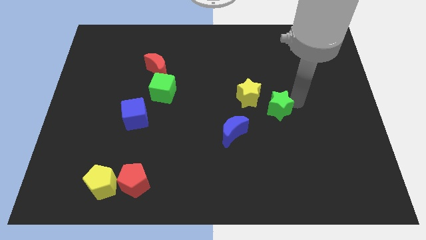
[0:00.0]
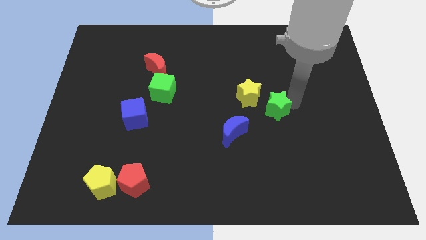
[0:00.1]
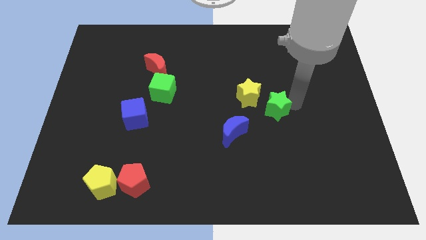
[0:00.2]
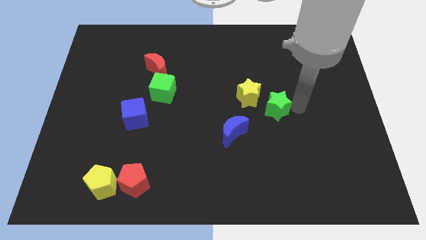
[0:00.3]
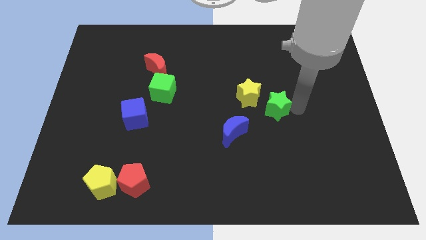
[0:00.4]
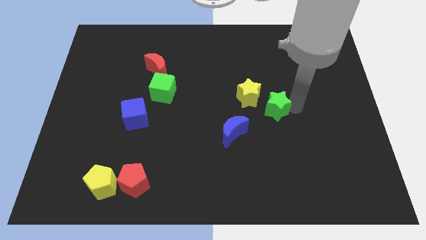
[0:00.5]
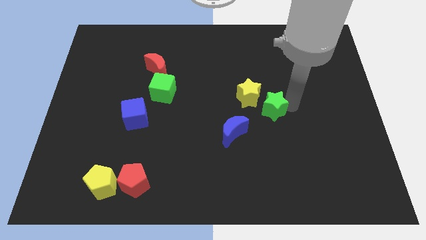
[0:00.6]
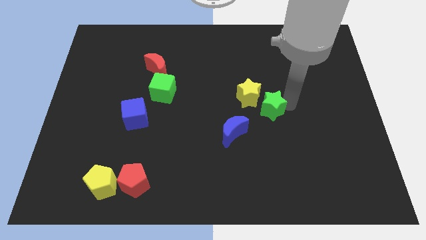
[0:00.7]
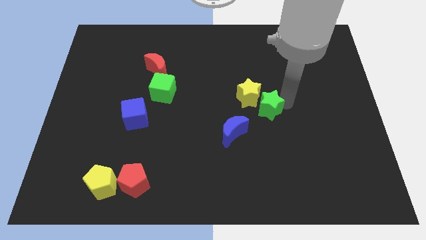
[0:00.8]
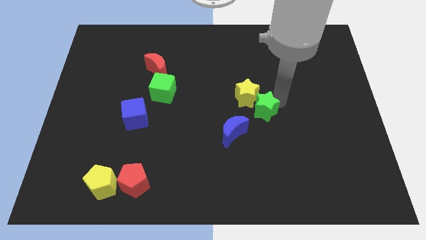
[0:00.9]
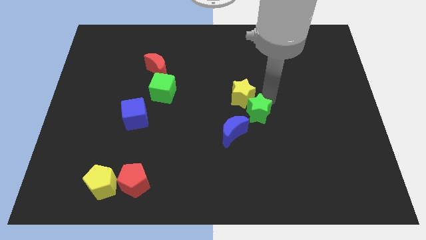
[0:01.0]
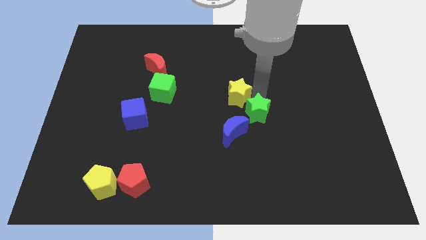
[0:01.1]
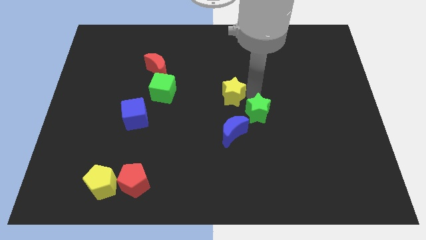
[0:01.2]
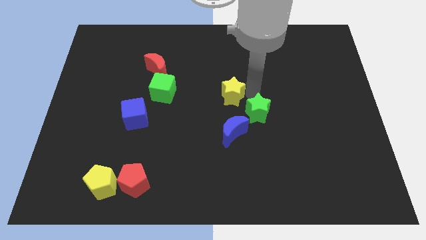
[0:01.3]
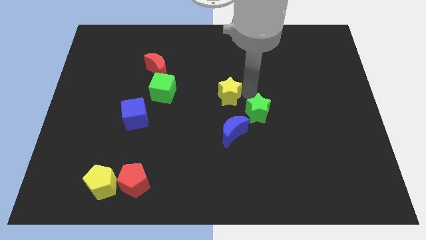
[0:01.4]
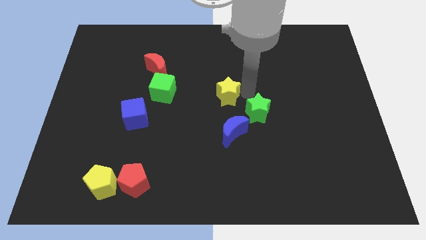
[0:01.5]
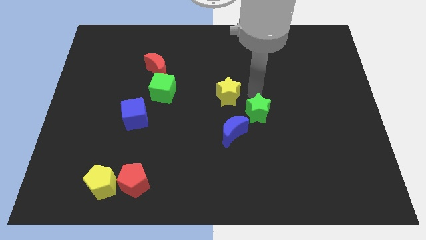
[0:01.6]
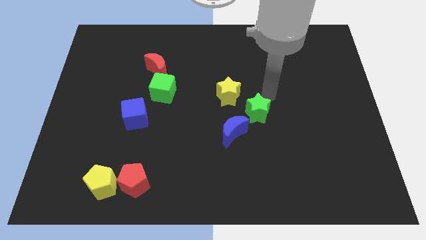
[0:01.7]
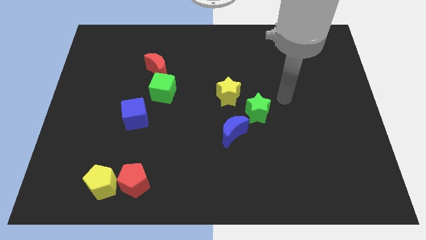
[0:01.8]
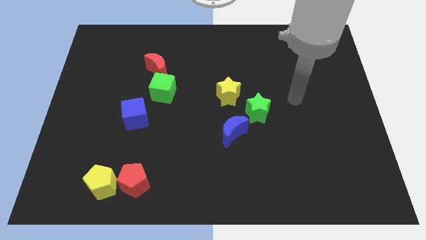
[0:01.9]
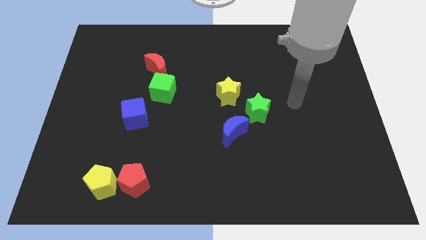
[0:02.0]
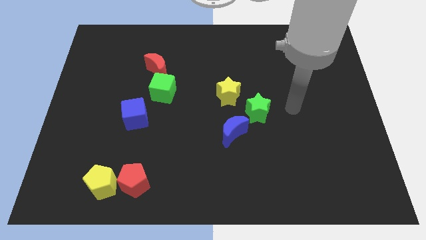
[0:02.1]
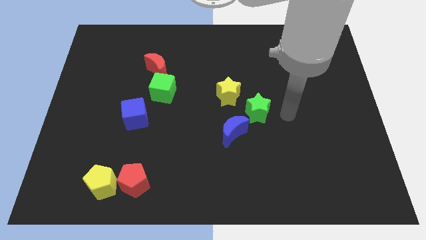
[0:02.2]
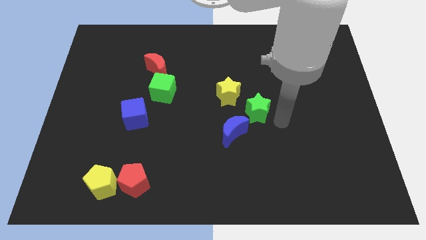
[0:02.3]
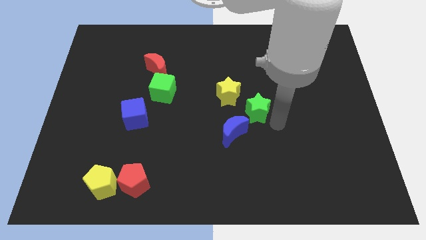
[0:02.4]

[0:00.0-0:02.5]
place the yellow star above the blue moon

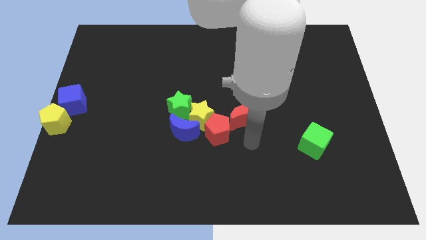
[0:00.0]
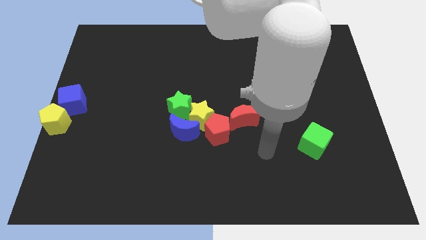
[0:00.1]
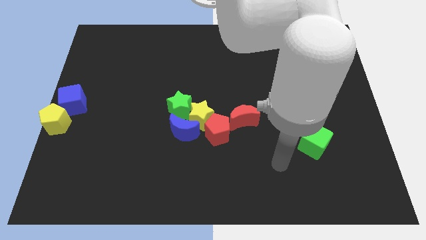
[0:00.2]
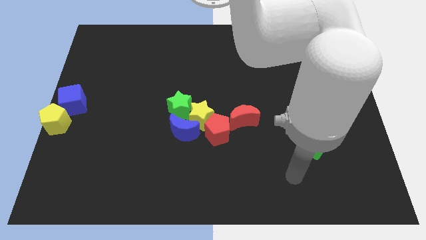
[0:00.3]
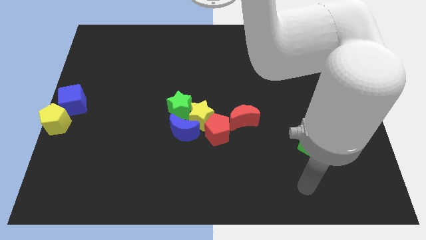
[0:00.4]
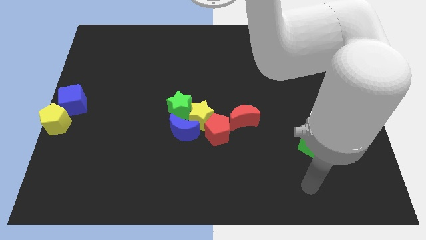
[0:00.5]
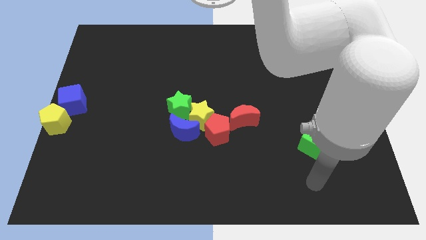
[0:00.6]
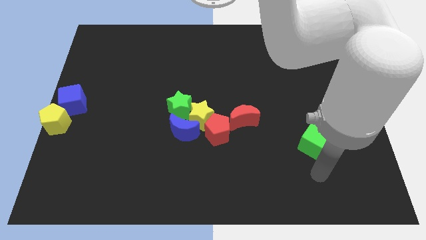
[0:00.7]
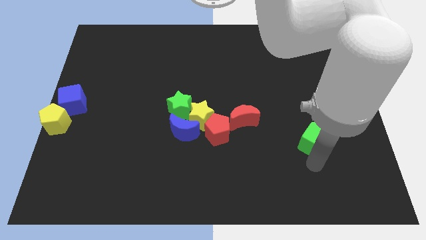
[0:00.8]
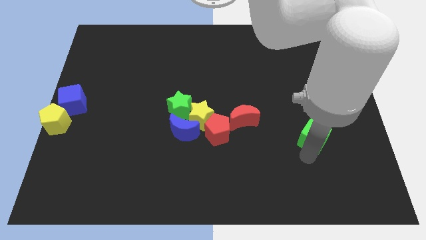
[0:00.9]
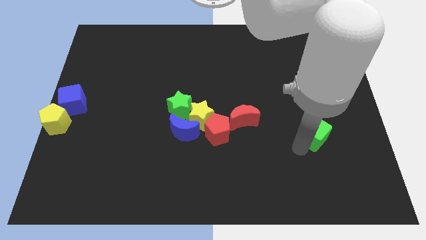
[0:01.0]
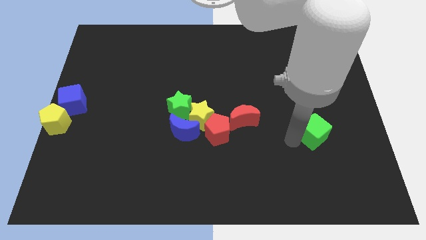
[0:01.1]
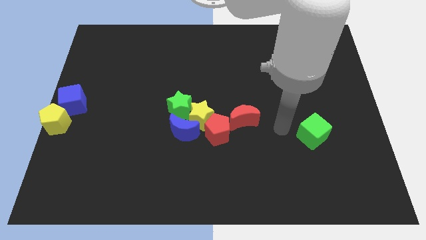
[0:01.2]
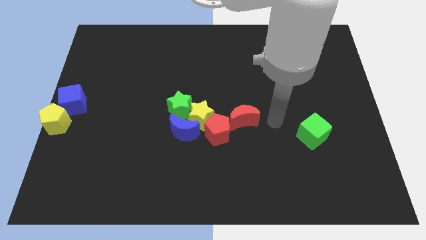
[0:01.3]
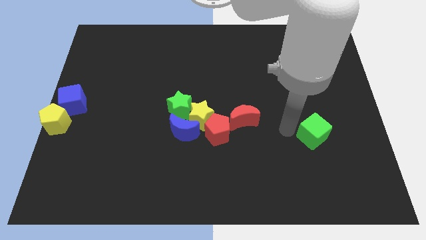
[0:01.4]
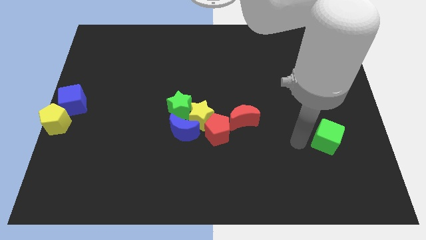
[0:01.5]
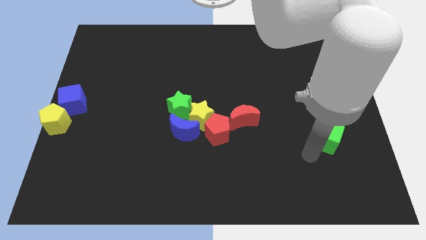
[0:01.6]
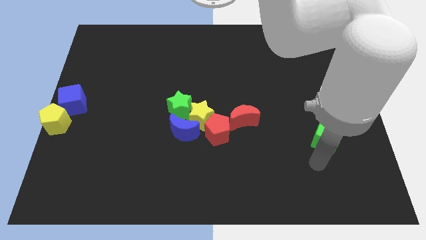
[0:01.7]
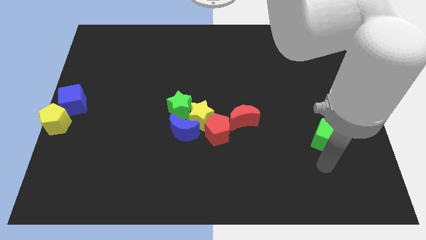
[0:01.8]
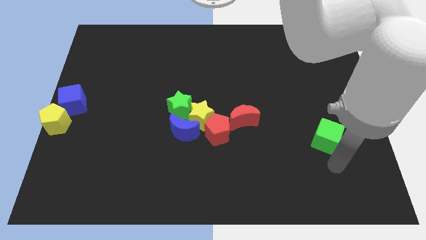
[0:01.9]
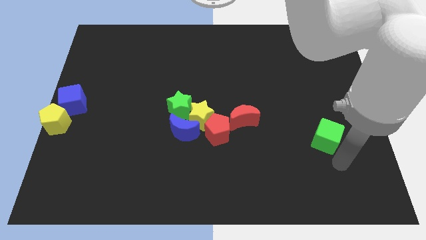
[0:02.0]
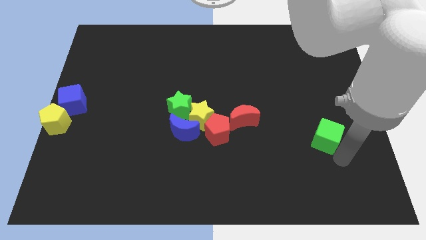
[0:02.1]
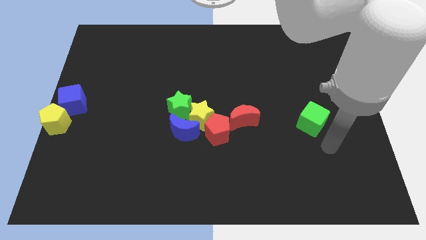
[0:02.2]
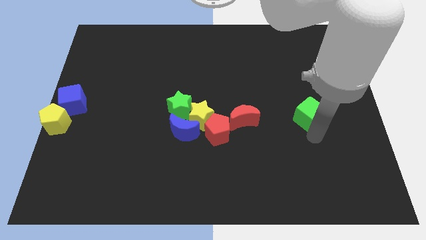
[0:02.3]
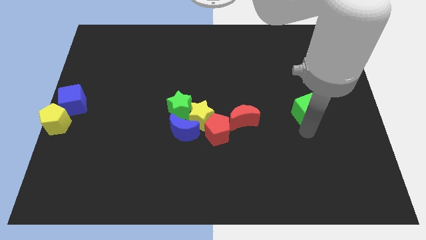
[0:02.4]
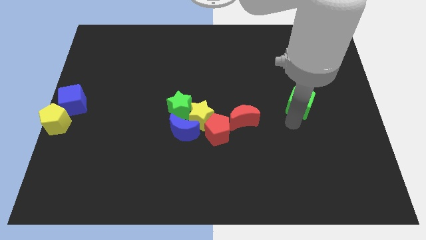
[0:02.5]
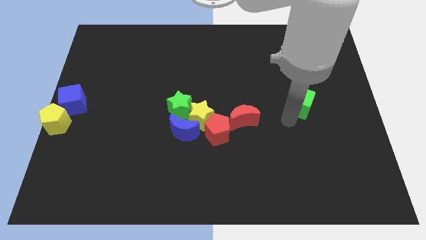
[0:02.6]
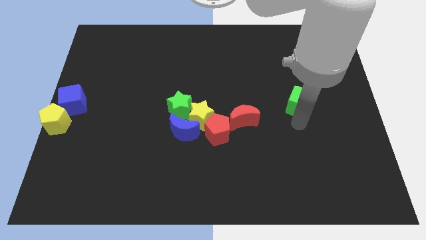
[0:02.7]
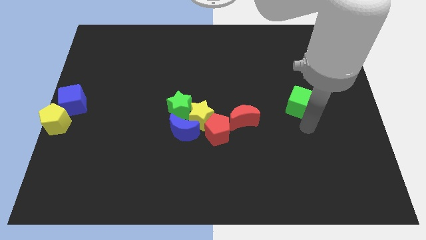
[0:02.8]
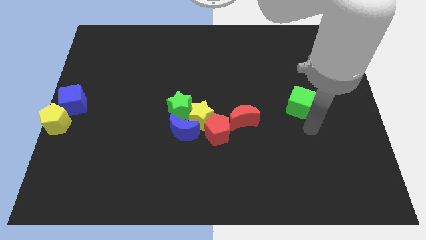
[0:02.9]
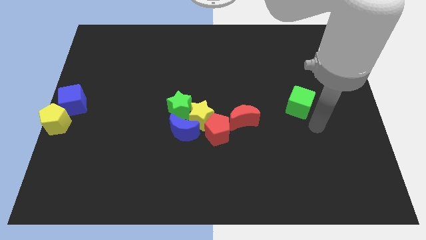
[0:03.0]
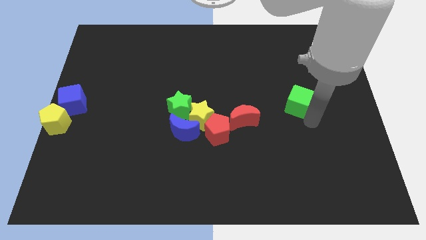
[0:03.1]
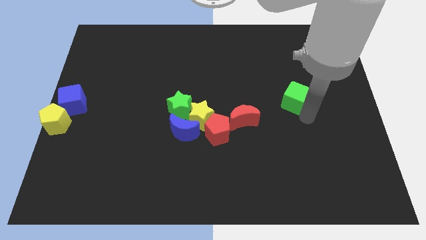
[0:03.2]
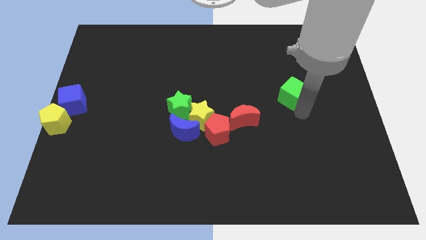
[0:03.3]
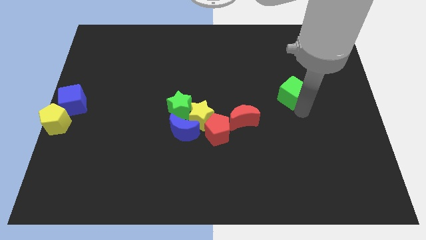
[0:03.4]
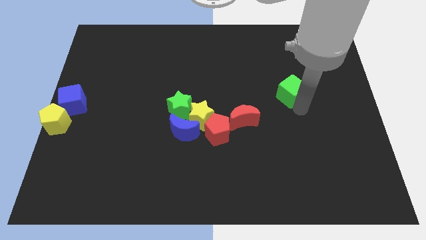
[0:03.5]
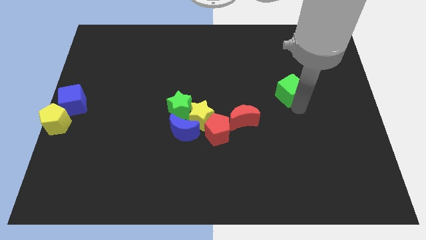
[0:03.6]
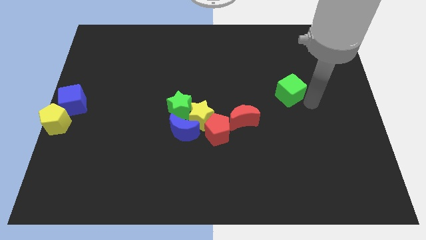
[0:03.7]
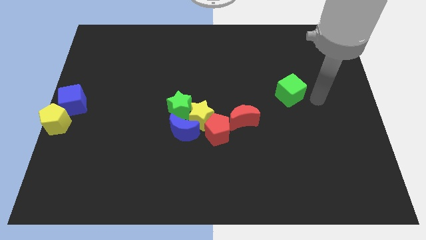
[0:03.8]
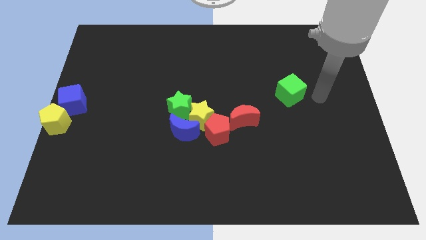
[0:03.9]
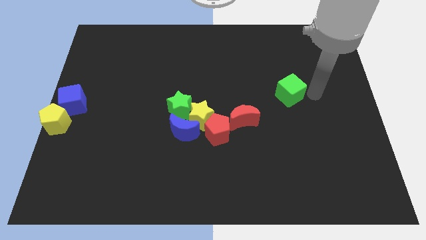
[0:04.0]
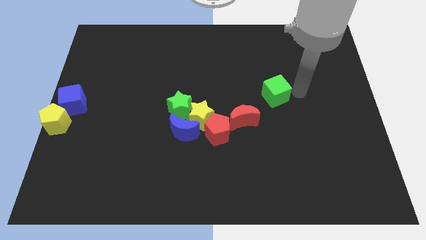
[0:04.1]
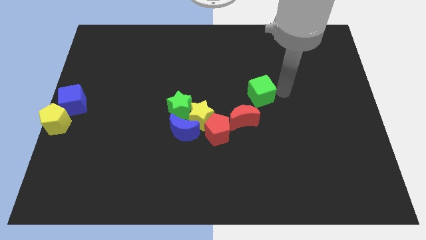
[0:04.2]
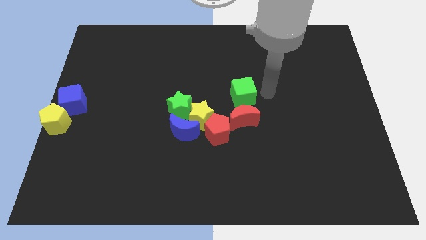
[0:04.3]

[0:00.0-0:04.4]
place the green cube above the red crescent

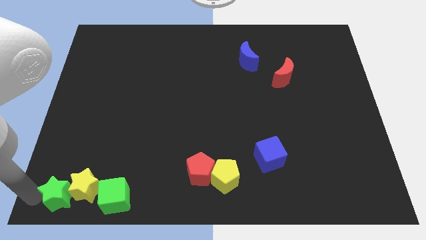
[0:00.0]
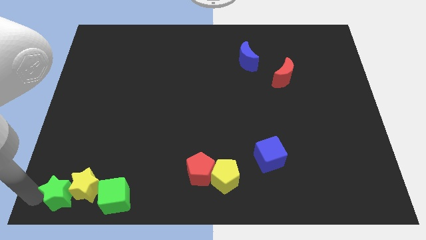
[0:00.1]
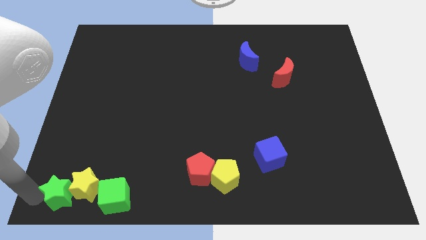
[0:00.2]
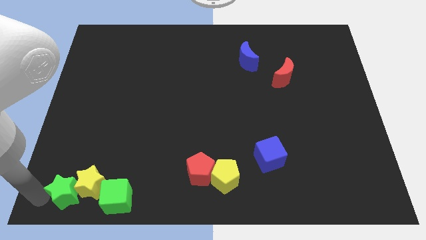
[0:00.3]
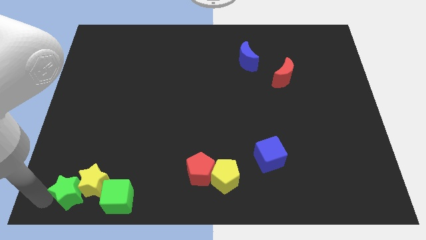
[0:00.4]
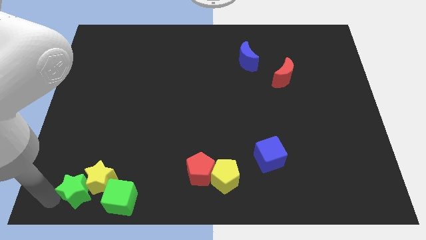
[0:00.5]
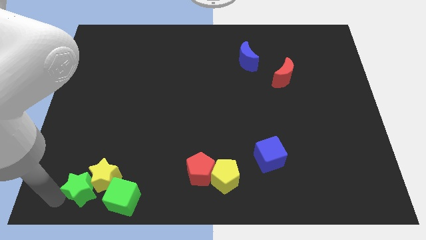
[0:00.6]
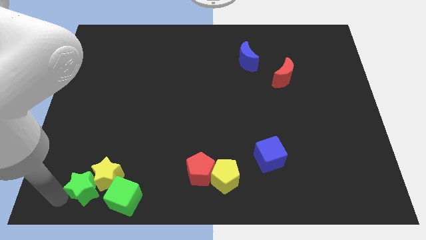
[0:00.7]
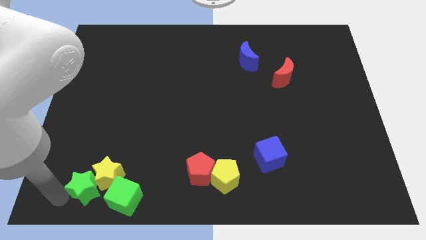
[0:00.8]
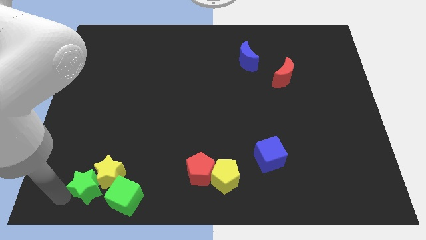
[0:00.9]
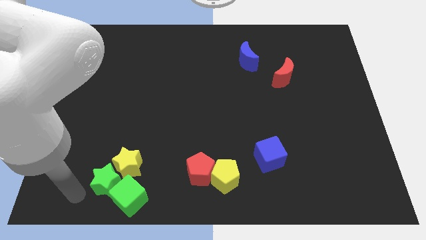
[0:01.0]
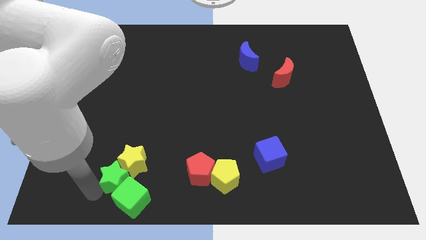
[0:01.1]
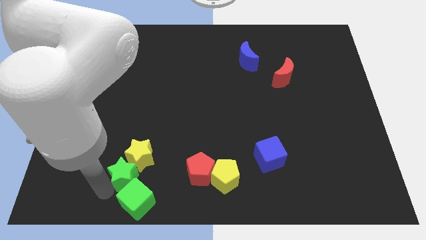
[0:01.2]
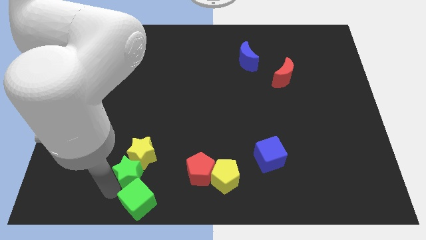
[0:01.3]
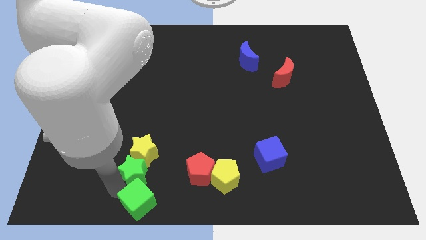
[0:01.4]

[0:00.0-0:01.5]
move the green star above the green cube

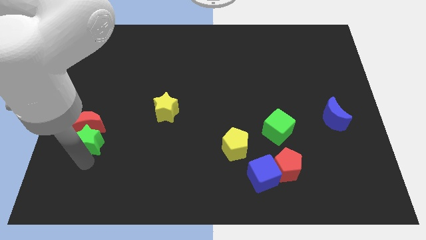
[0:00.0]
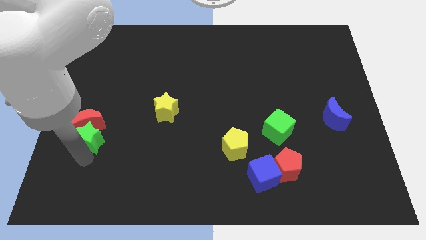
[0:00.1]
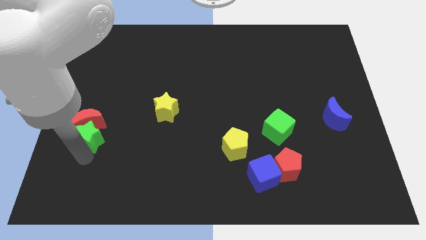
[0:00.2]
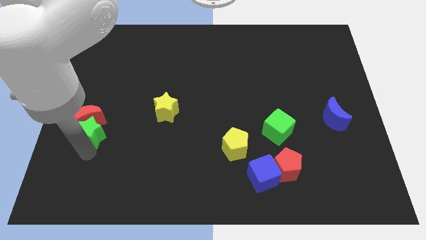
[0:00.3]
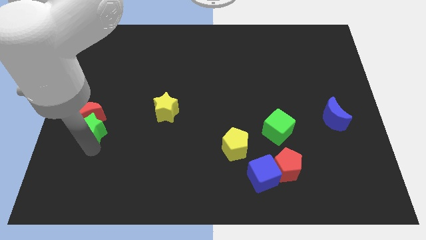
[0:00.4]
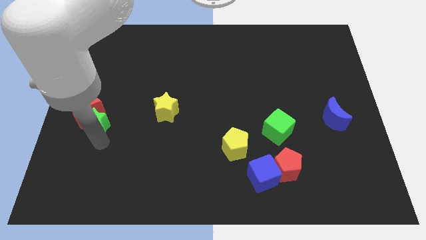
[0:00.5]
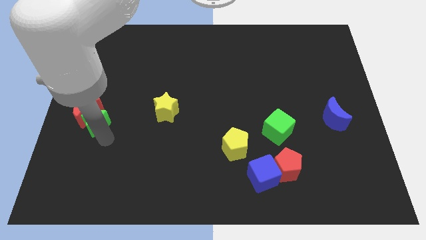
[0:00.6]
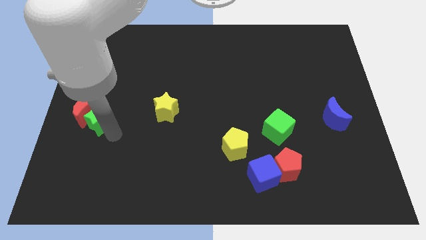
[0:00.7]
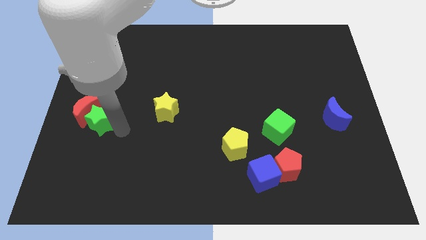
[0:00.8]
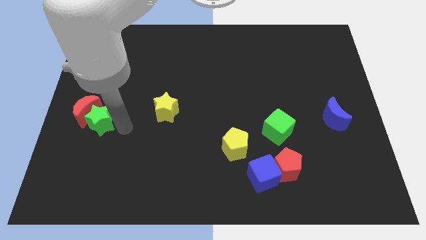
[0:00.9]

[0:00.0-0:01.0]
push the red crescent with the help of the green star towards the left side of the board
